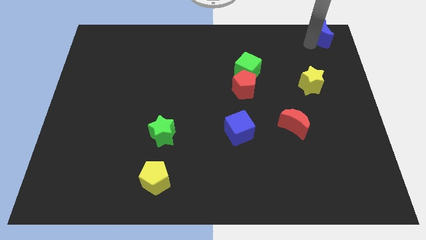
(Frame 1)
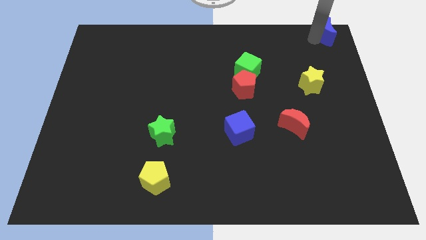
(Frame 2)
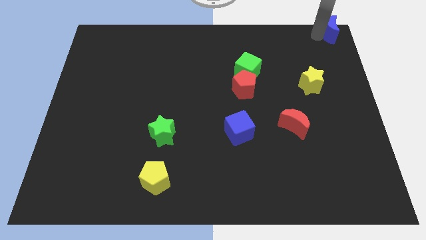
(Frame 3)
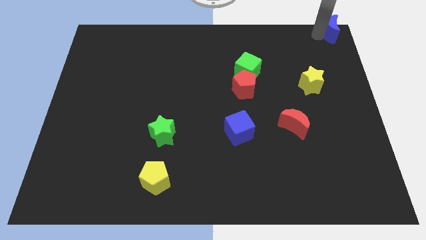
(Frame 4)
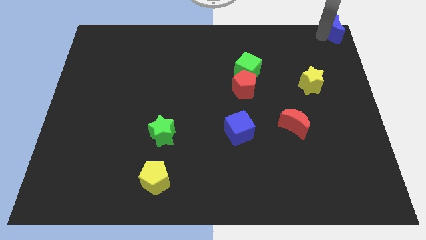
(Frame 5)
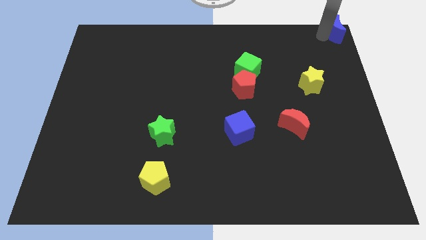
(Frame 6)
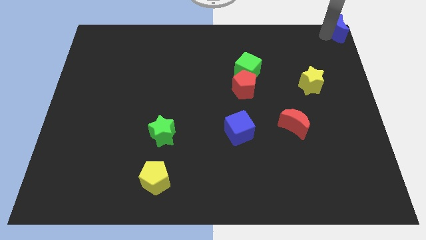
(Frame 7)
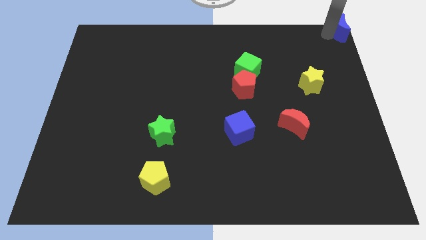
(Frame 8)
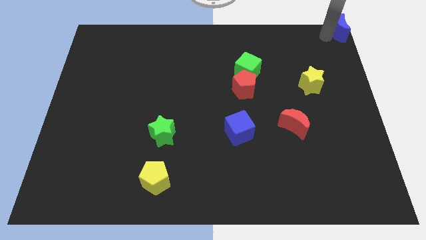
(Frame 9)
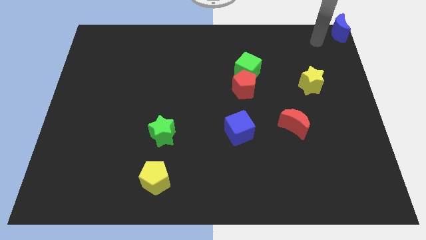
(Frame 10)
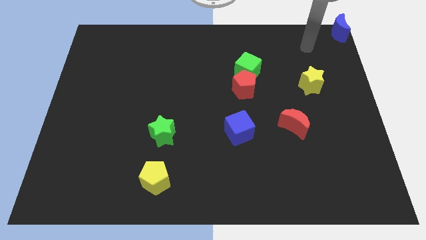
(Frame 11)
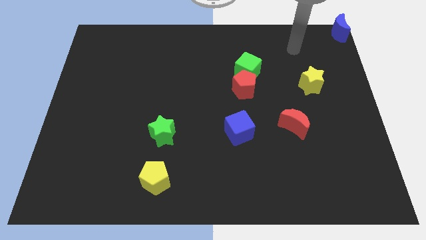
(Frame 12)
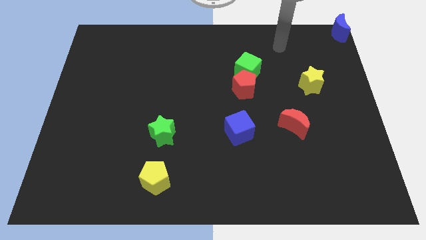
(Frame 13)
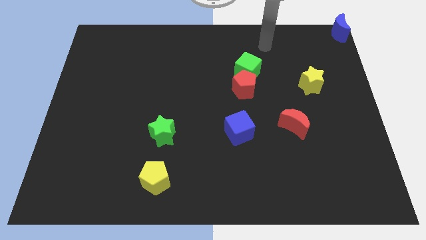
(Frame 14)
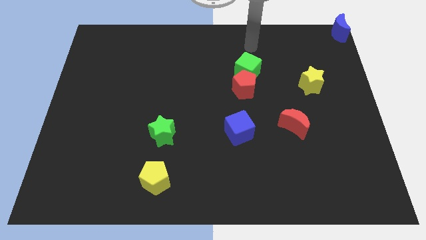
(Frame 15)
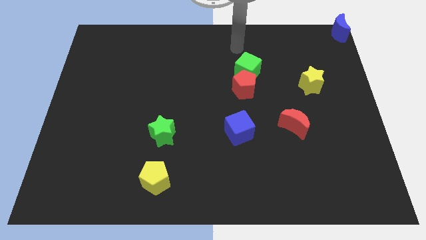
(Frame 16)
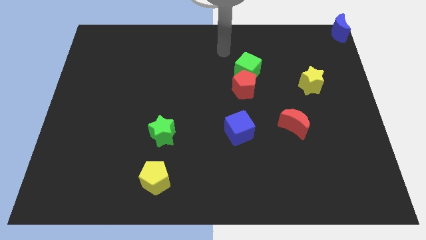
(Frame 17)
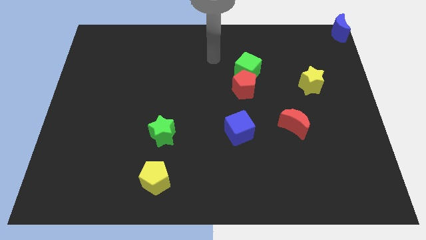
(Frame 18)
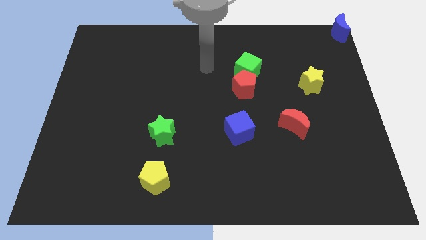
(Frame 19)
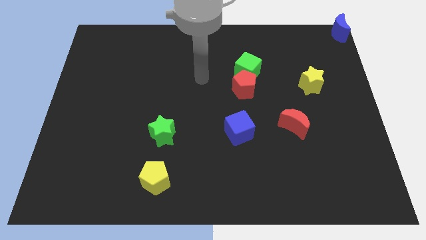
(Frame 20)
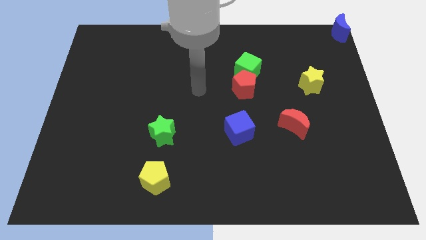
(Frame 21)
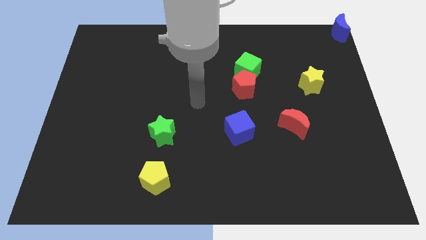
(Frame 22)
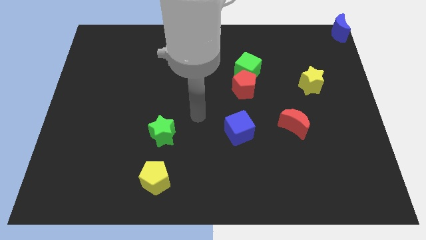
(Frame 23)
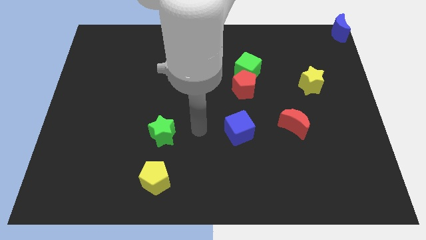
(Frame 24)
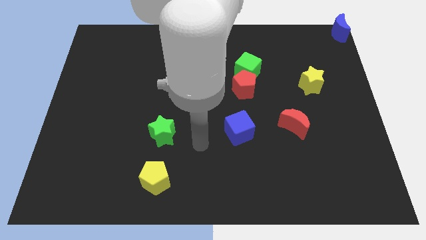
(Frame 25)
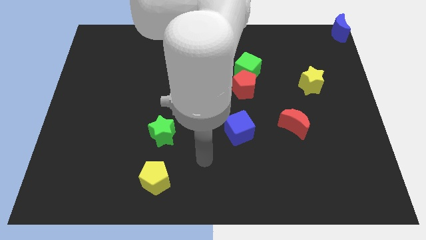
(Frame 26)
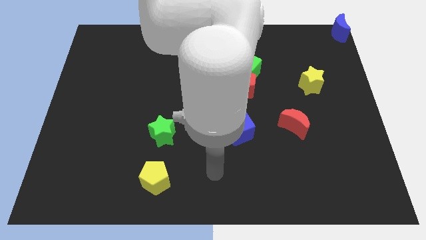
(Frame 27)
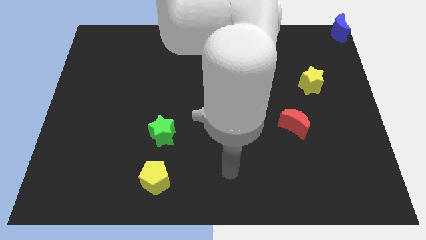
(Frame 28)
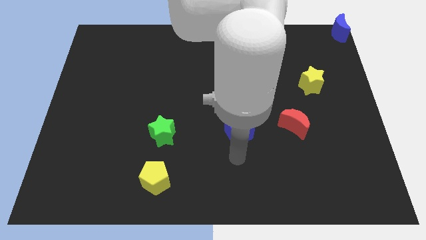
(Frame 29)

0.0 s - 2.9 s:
push the blue crescent towards the top right corner of the board

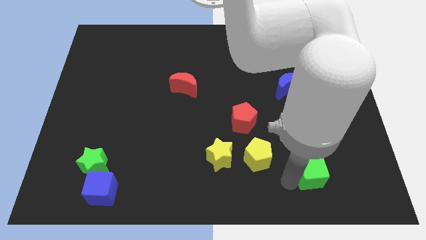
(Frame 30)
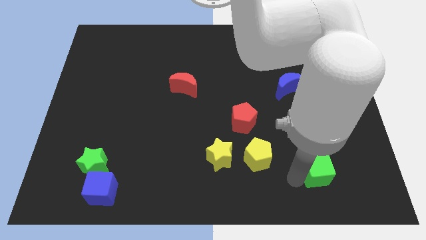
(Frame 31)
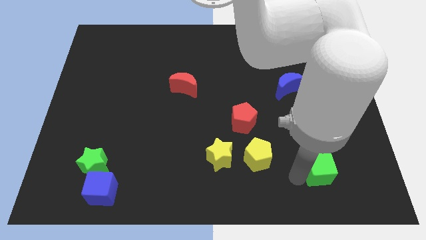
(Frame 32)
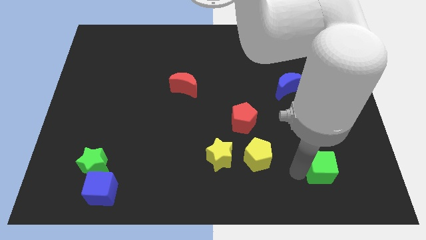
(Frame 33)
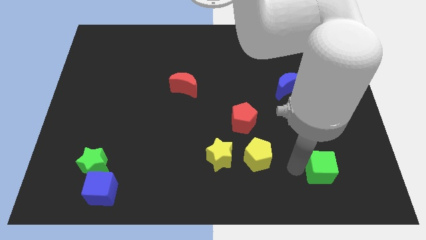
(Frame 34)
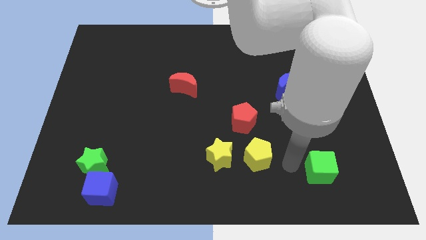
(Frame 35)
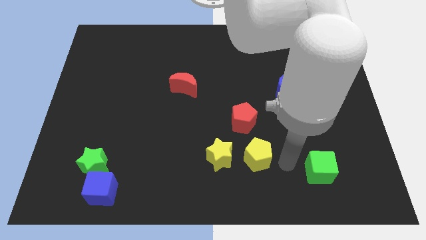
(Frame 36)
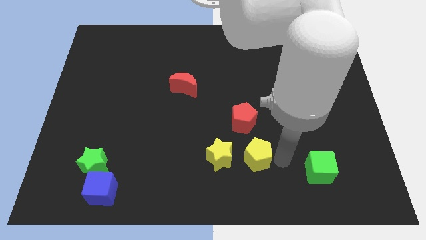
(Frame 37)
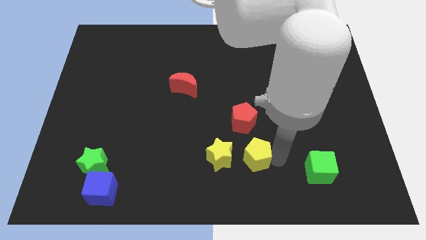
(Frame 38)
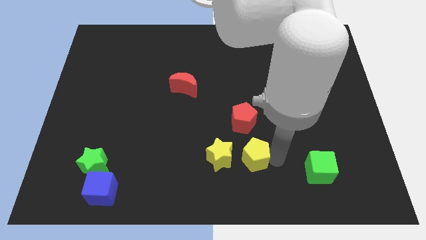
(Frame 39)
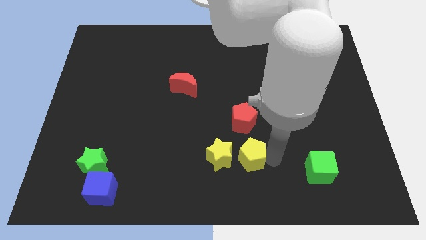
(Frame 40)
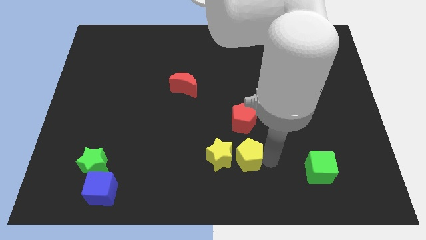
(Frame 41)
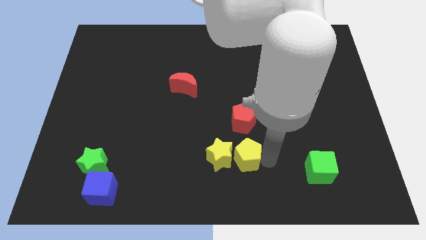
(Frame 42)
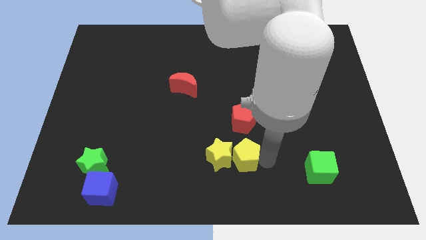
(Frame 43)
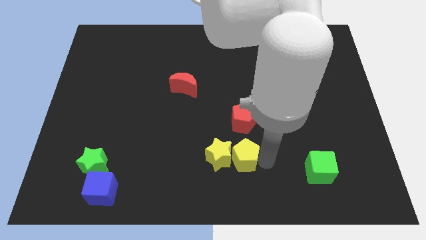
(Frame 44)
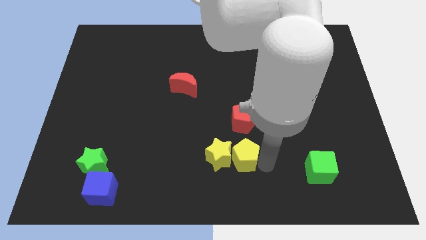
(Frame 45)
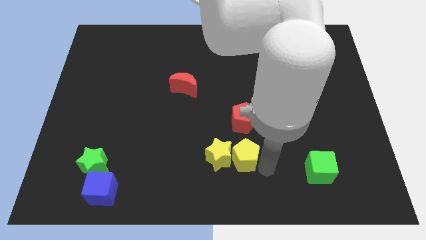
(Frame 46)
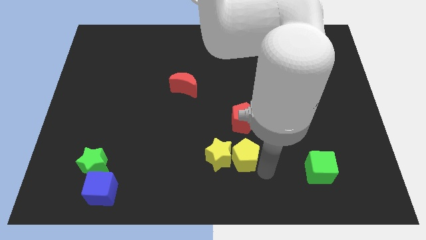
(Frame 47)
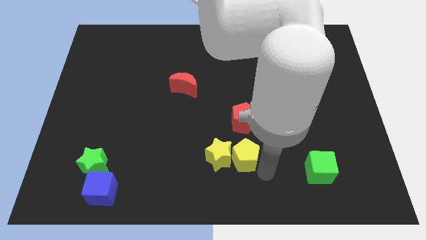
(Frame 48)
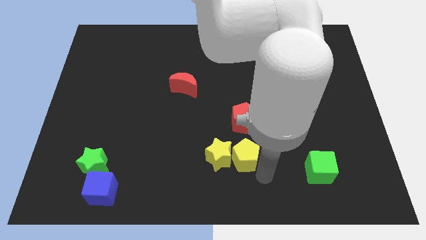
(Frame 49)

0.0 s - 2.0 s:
push the yellow pentagon close to the yellow star

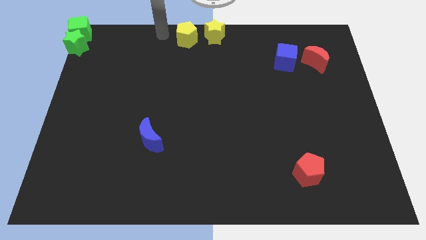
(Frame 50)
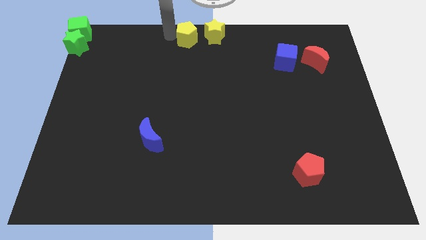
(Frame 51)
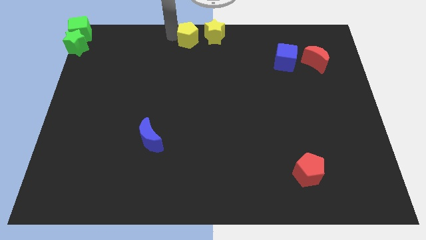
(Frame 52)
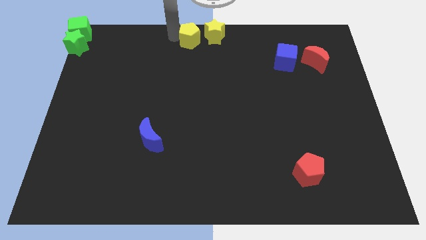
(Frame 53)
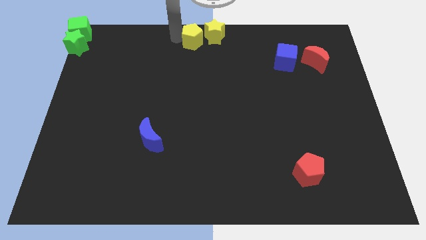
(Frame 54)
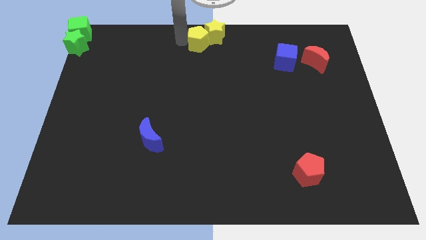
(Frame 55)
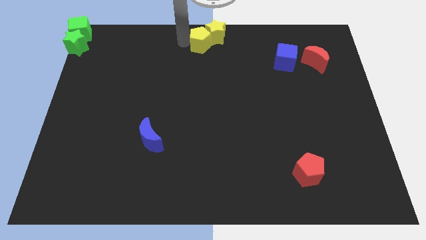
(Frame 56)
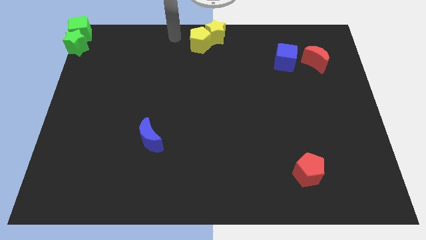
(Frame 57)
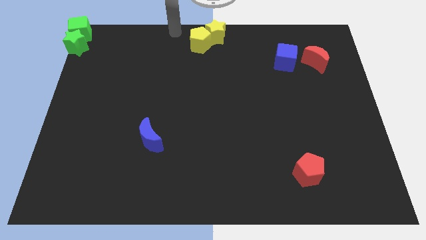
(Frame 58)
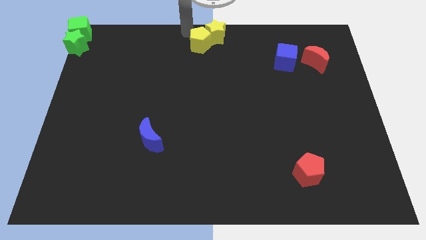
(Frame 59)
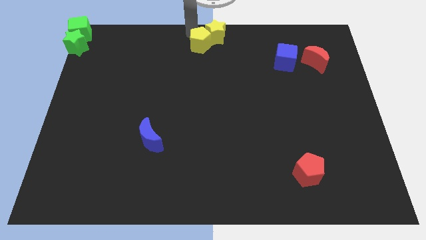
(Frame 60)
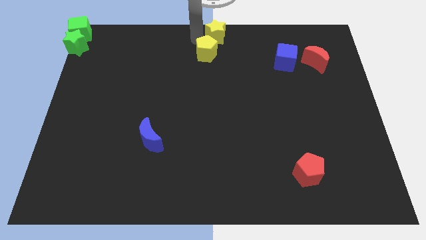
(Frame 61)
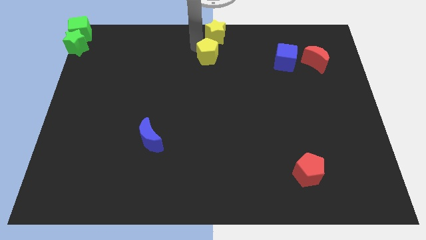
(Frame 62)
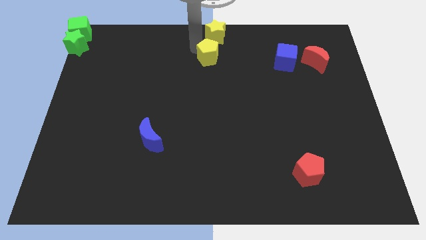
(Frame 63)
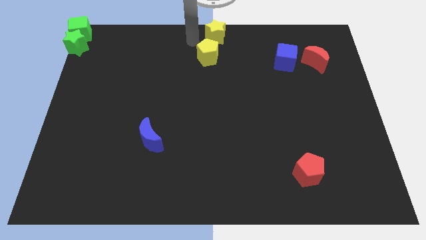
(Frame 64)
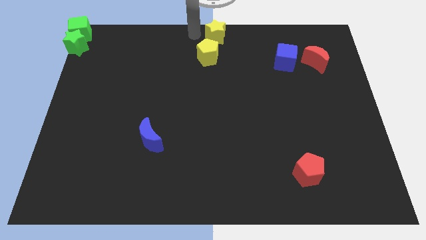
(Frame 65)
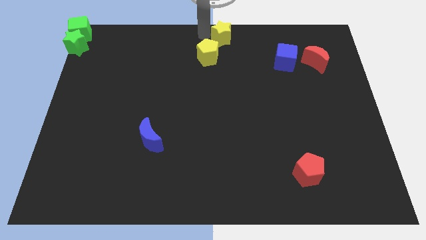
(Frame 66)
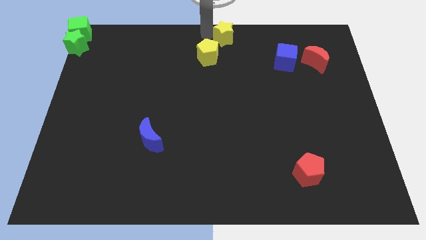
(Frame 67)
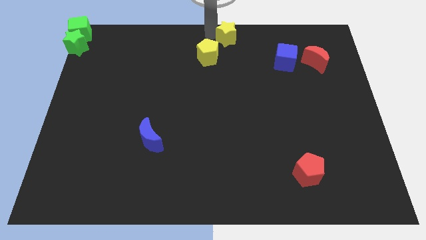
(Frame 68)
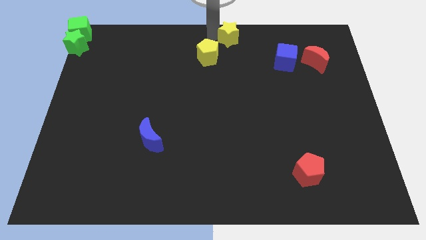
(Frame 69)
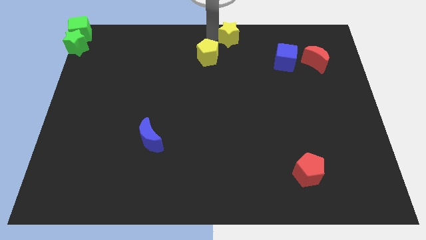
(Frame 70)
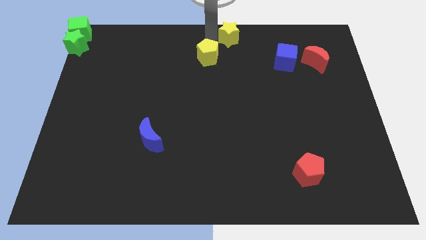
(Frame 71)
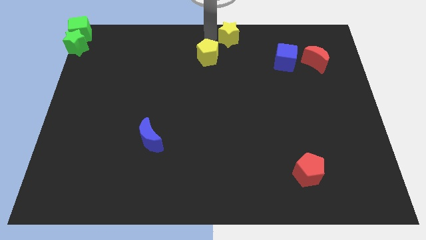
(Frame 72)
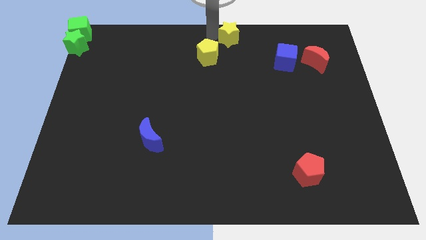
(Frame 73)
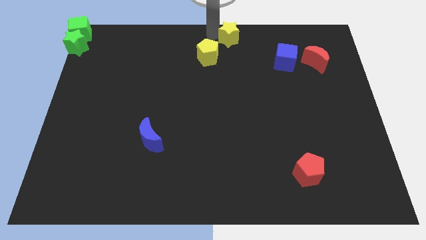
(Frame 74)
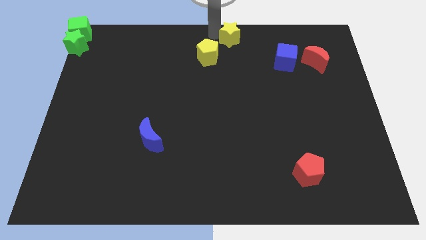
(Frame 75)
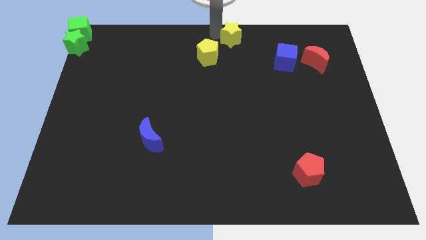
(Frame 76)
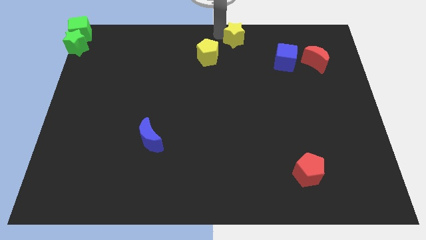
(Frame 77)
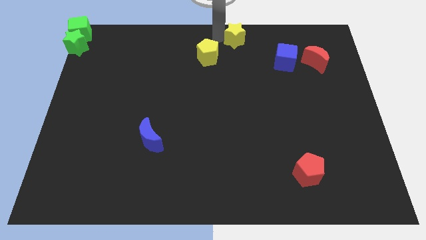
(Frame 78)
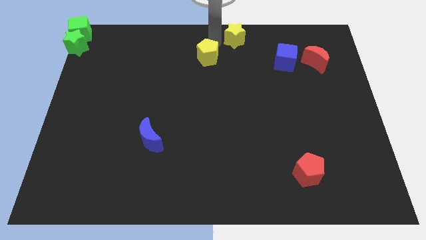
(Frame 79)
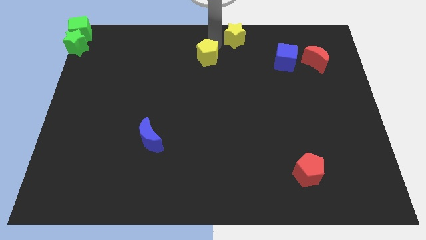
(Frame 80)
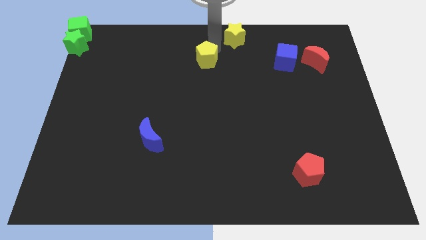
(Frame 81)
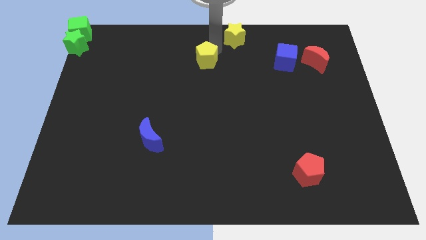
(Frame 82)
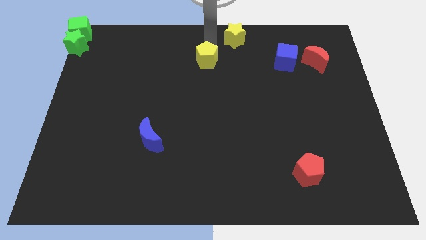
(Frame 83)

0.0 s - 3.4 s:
move the yellow pentagon slightly downwards

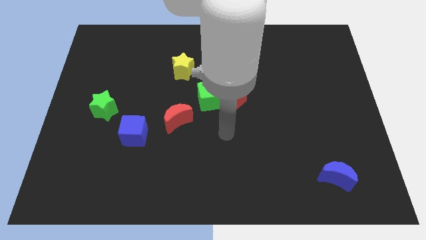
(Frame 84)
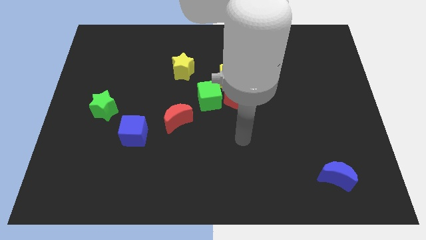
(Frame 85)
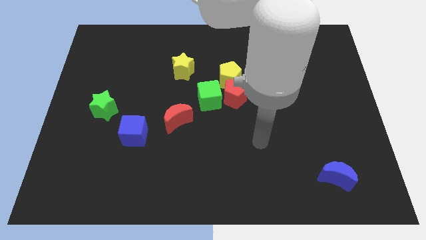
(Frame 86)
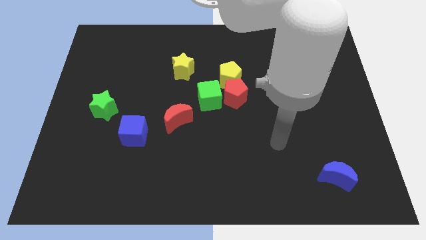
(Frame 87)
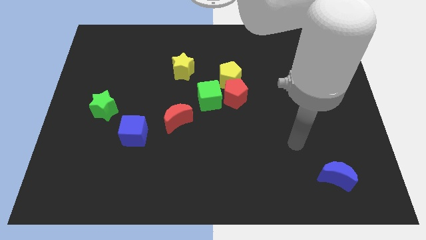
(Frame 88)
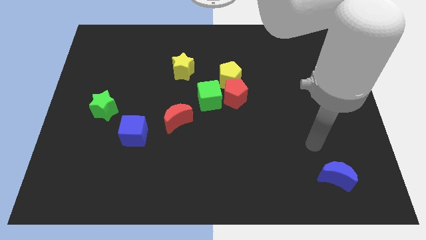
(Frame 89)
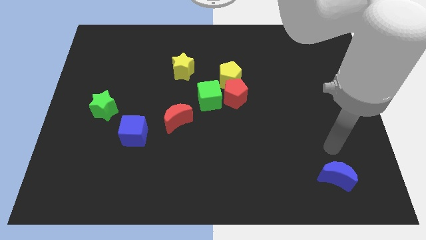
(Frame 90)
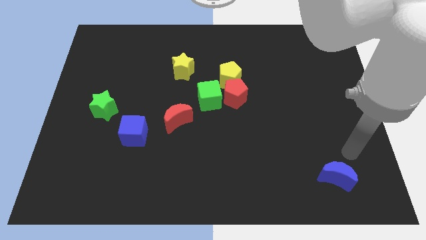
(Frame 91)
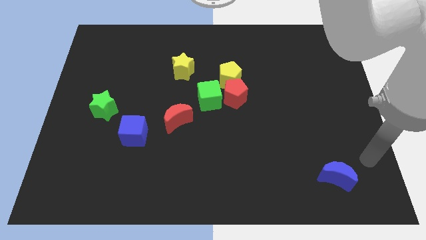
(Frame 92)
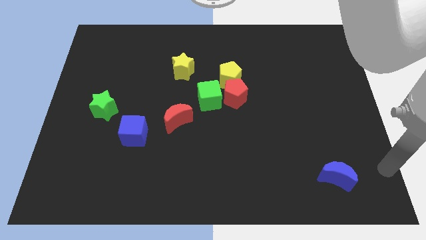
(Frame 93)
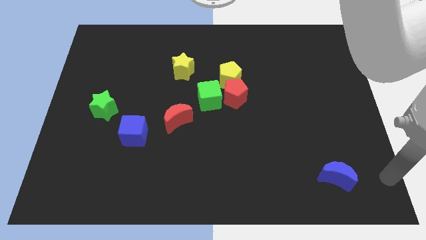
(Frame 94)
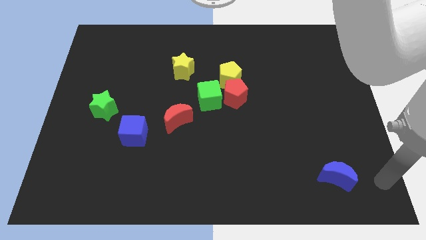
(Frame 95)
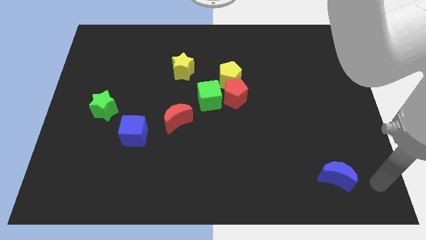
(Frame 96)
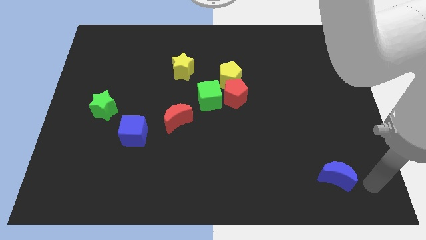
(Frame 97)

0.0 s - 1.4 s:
move the arm to the bottom right of the board
